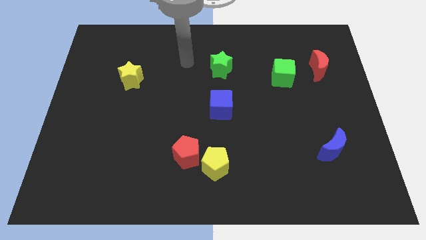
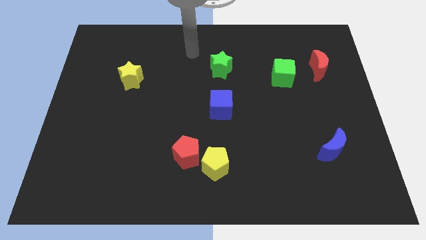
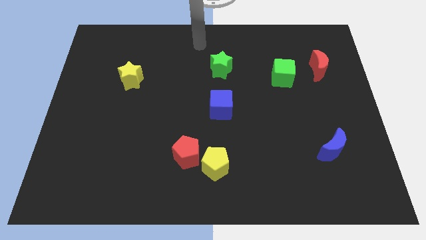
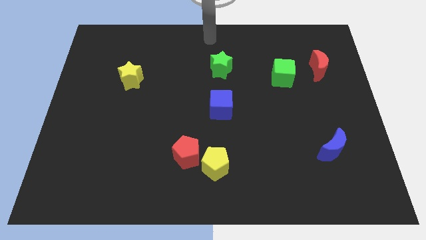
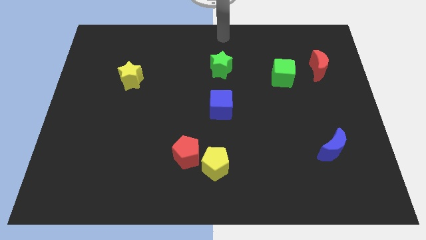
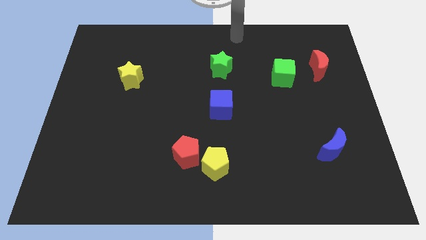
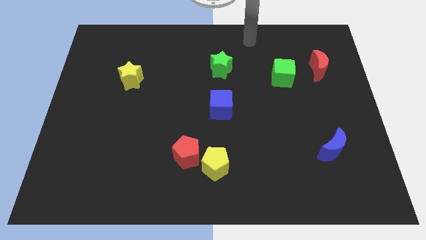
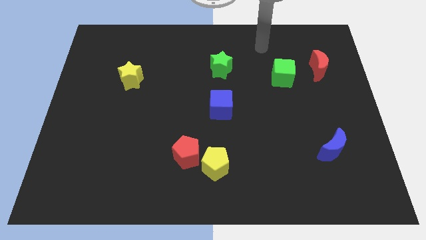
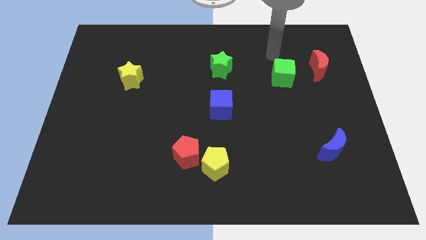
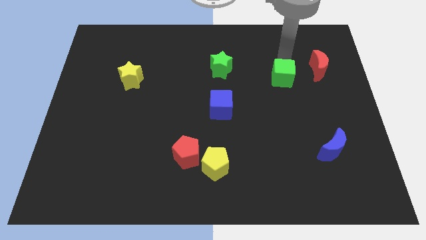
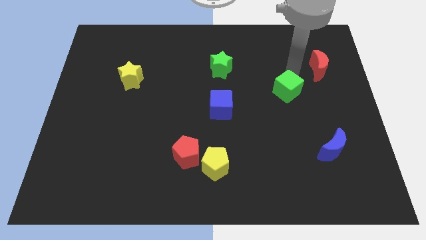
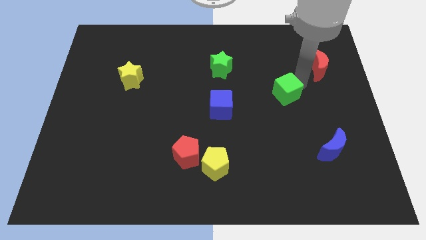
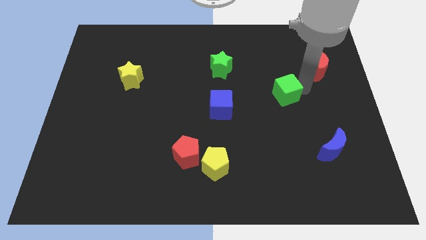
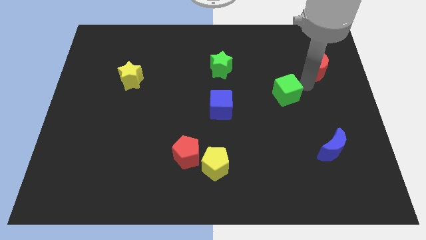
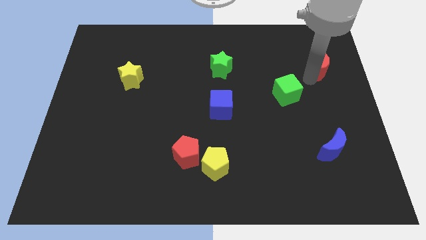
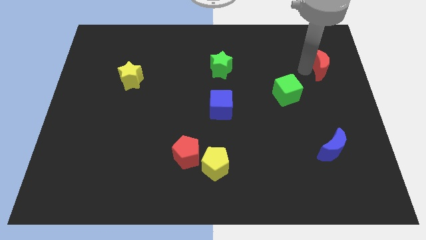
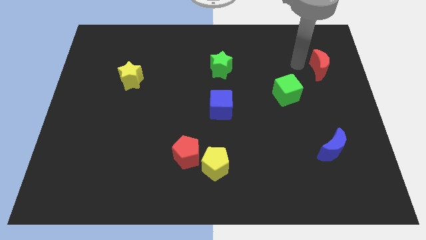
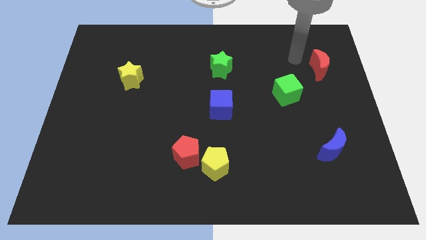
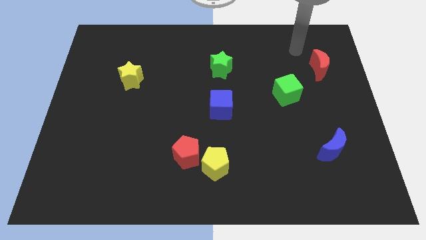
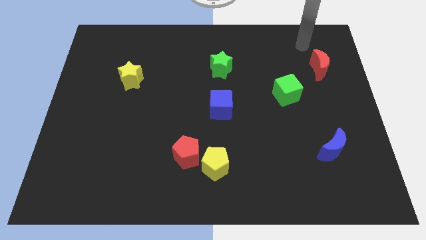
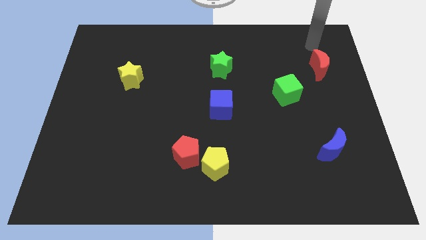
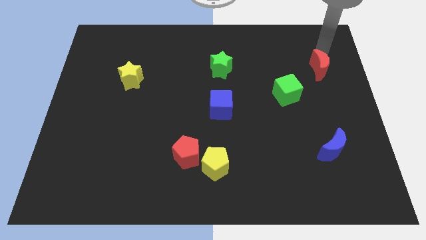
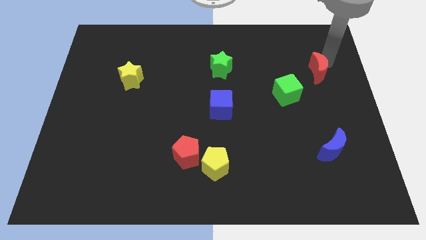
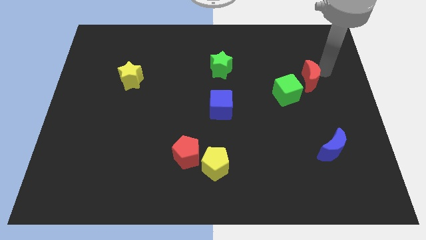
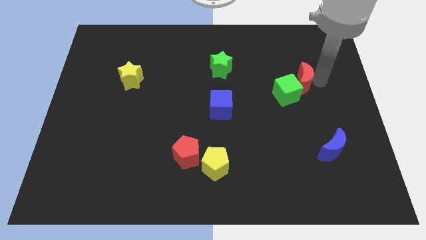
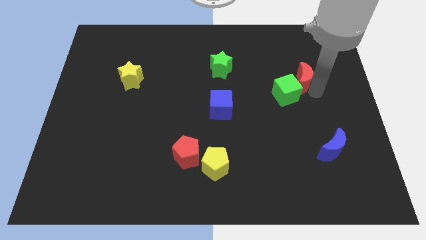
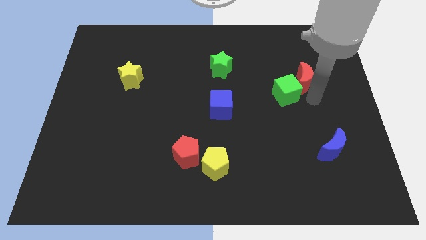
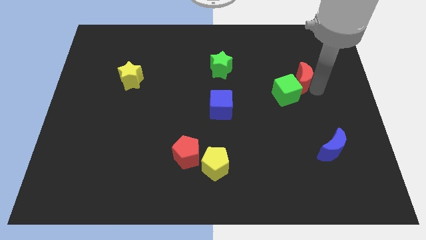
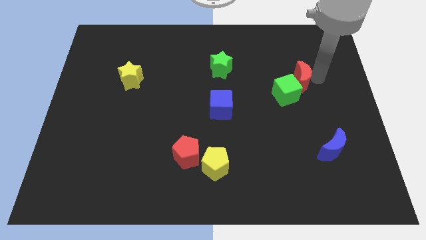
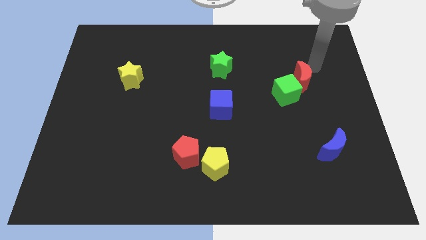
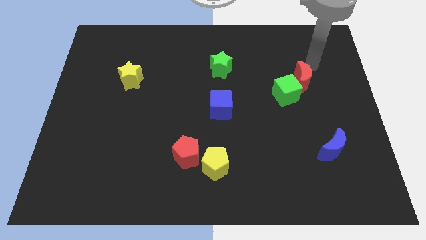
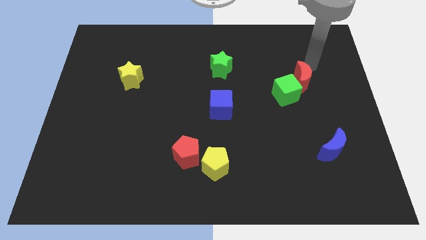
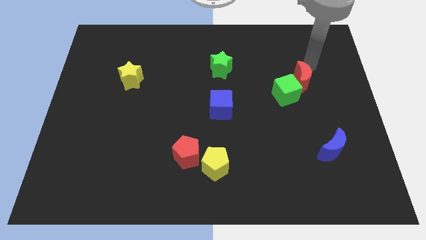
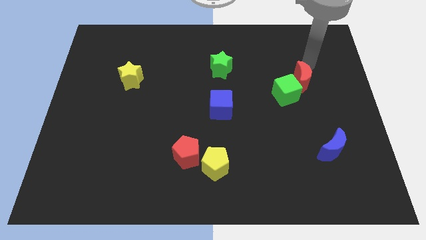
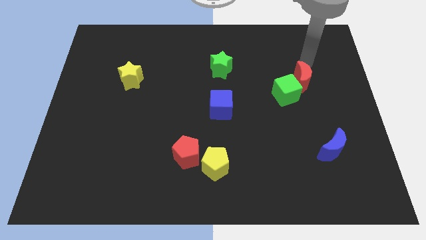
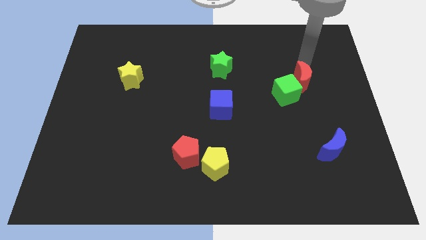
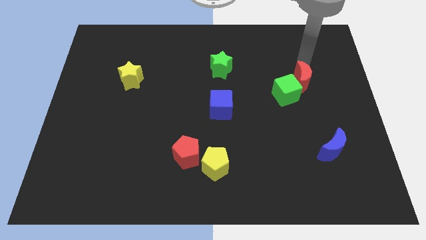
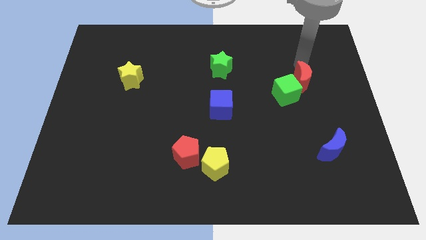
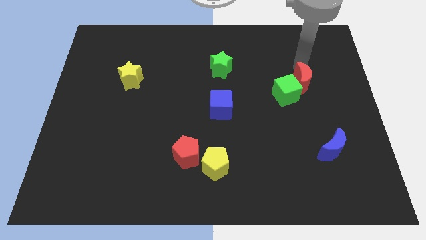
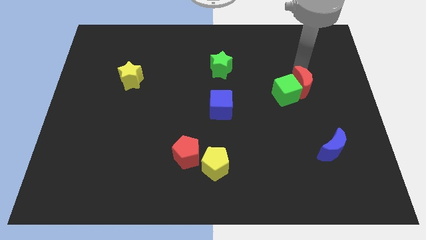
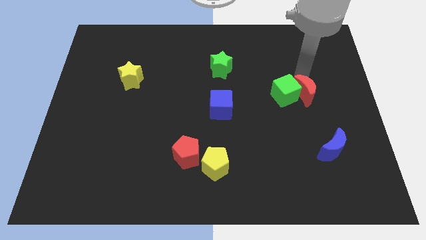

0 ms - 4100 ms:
join the green cube and the red crescent

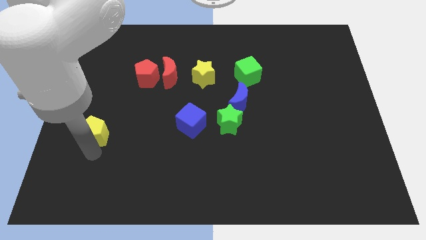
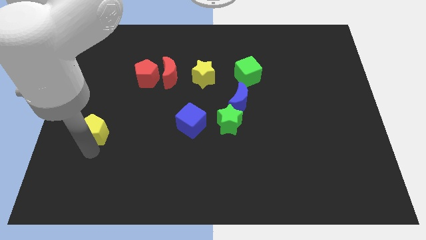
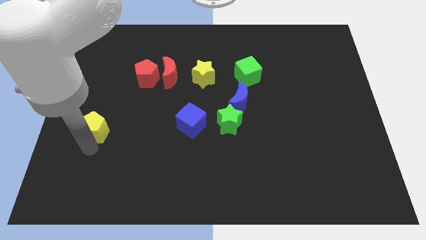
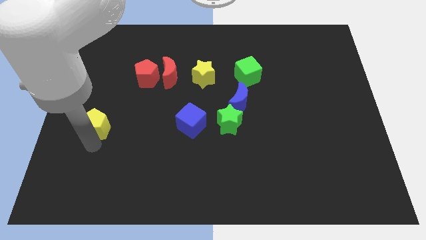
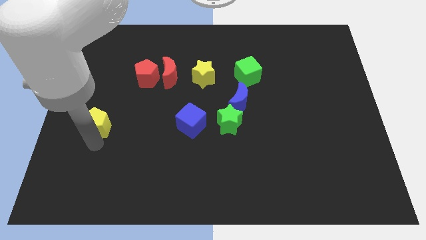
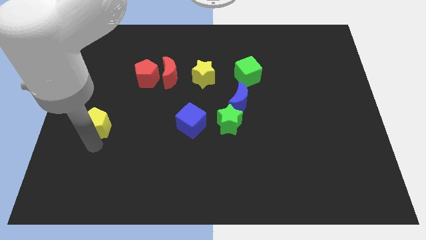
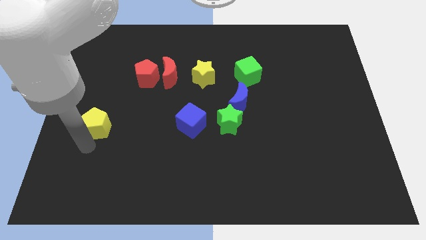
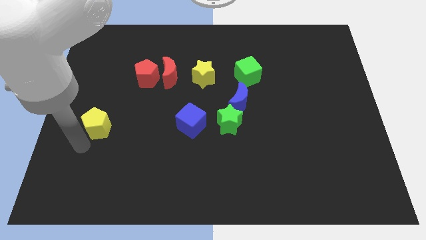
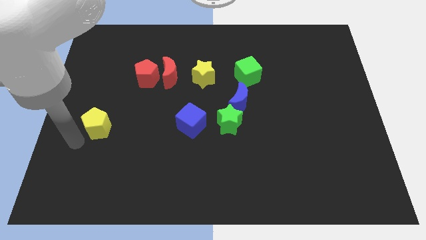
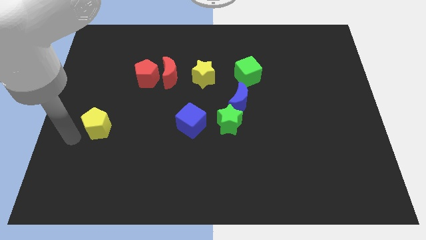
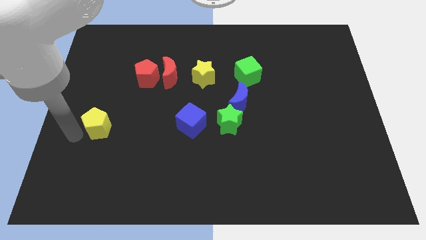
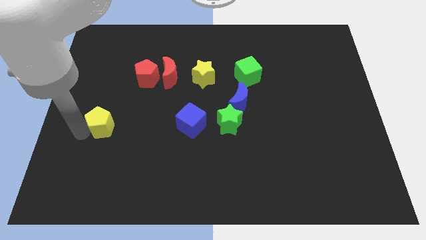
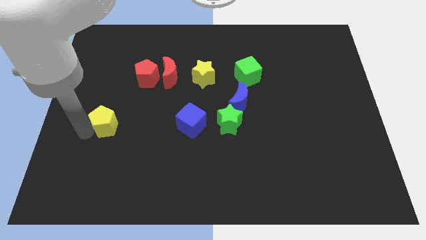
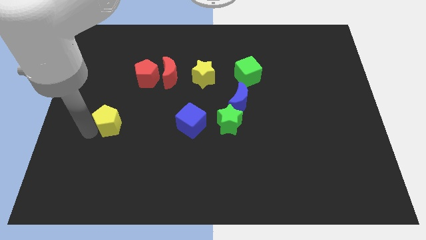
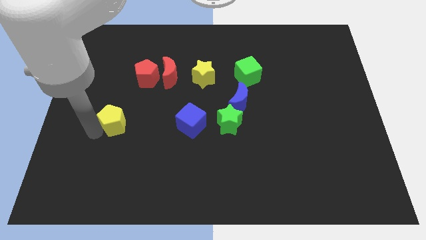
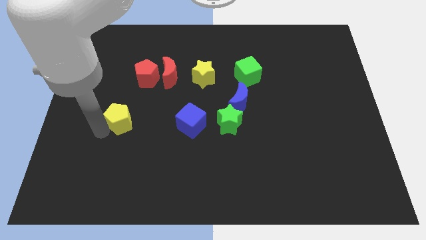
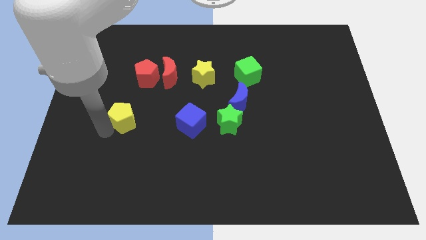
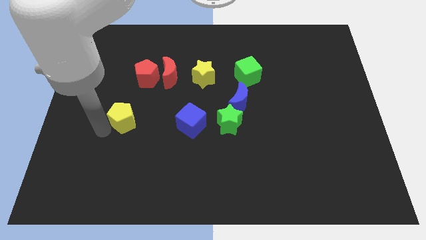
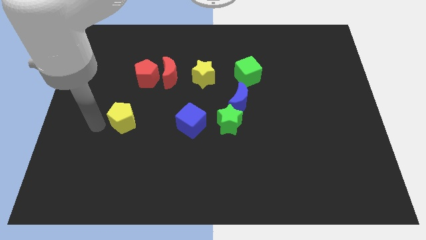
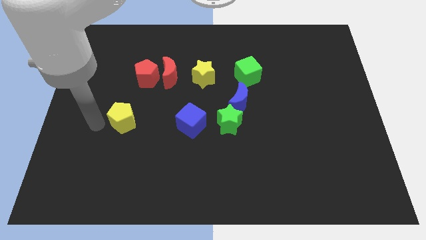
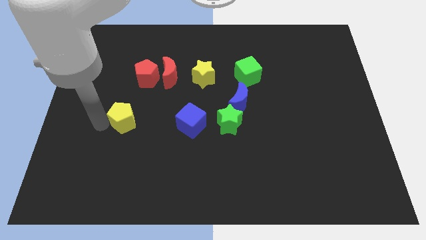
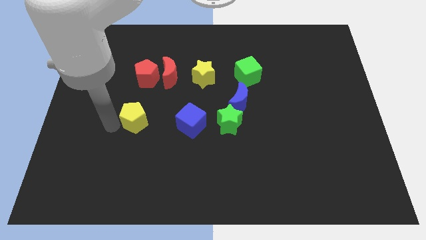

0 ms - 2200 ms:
move the yellow pentagon to the right

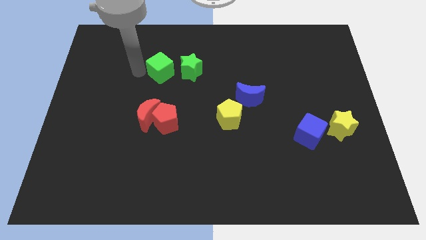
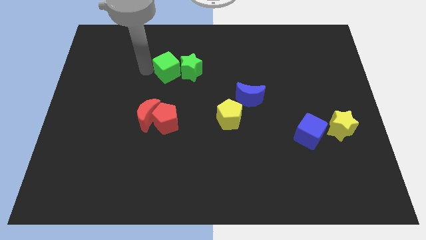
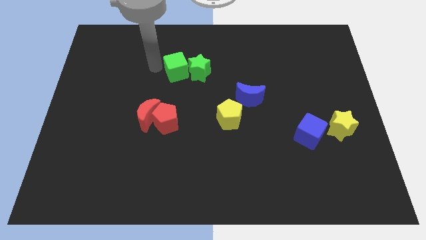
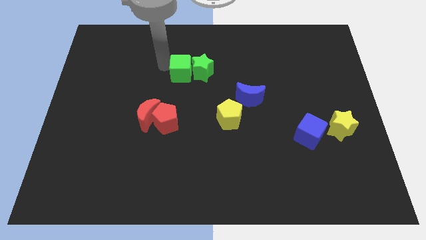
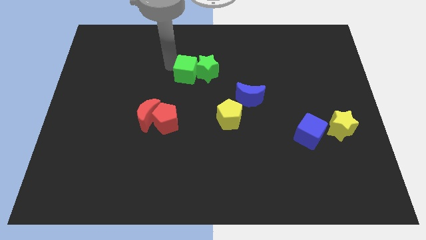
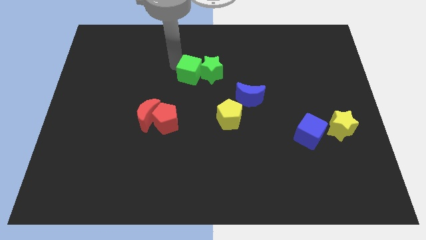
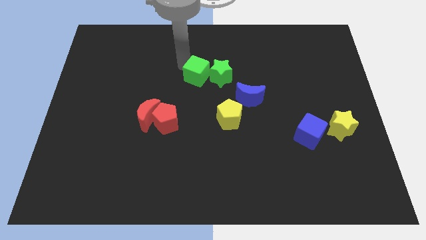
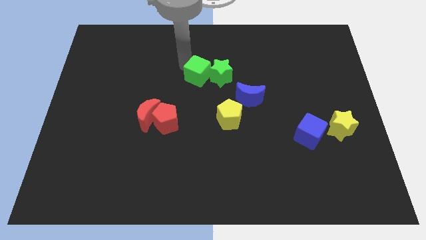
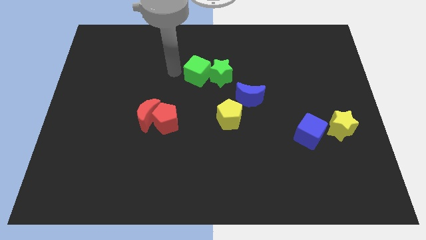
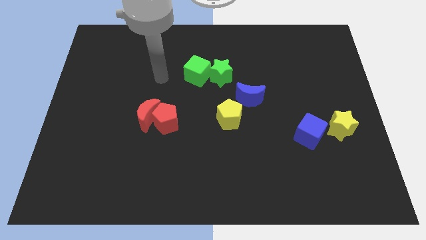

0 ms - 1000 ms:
push the green cube and green star to the center

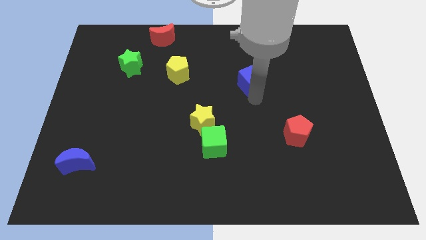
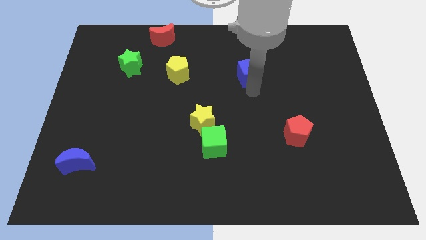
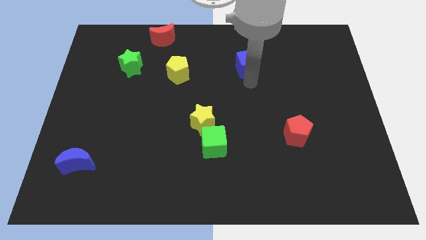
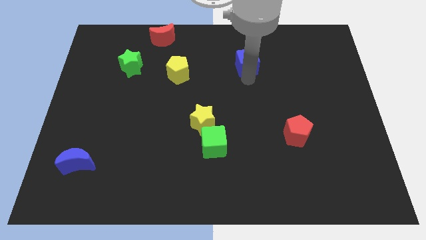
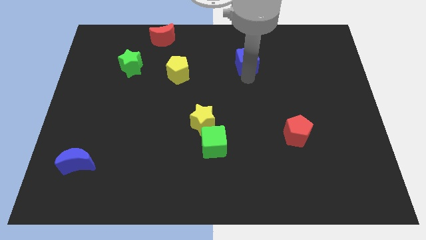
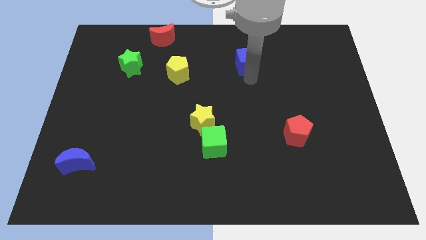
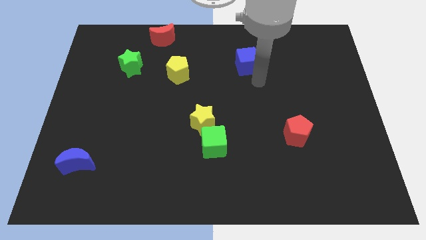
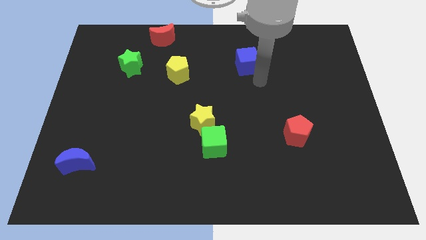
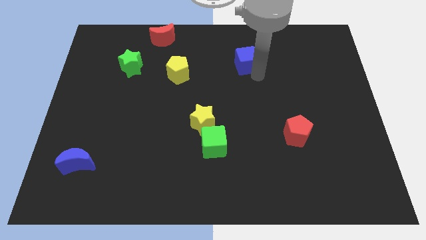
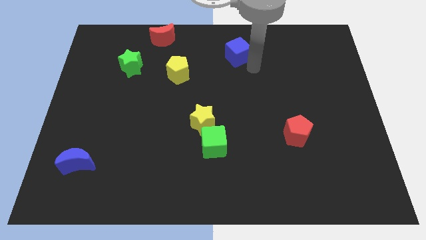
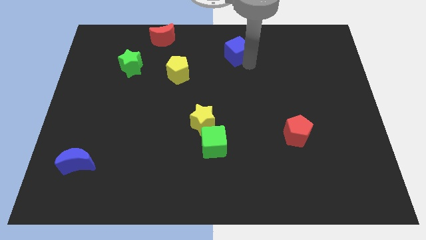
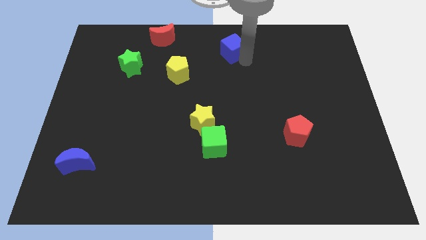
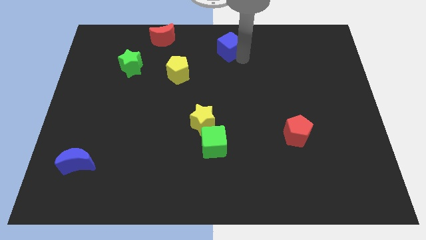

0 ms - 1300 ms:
slightly move the blue cube to the top center

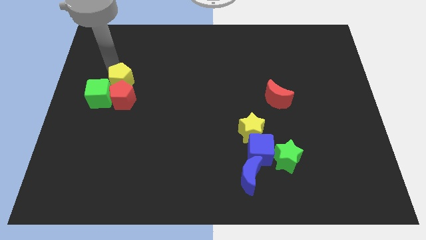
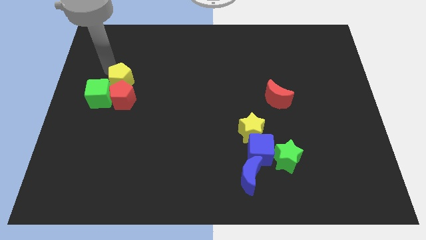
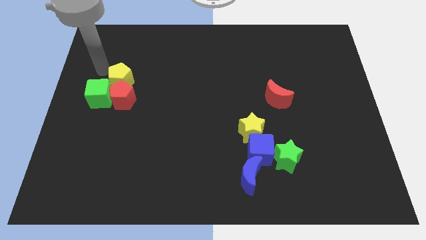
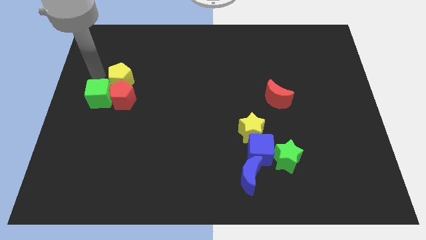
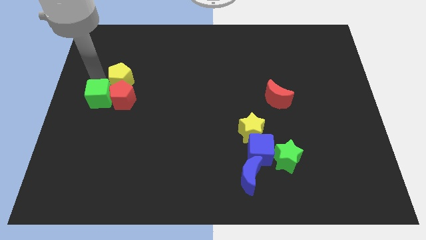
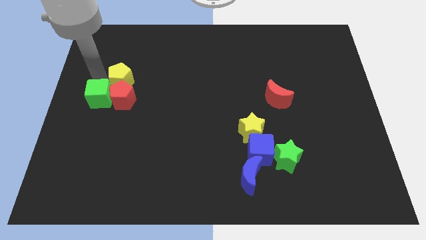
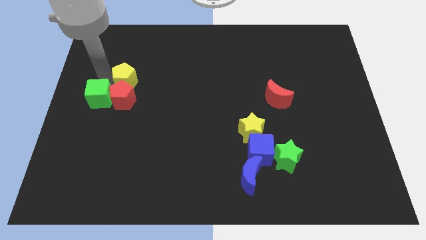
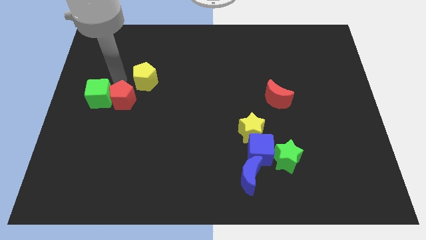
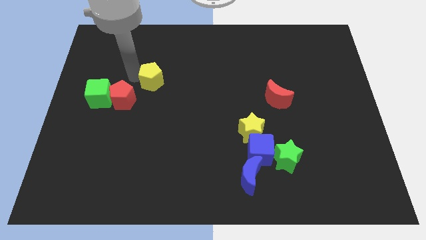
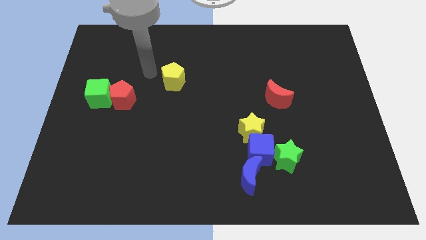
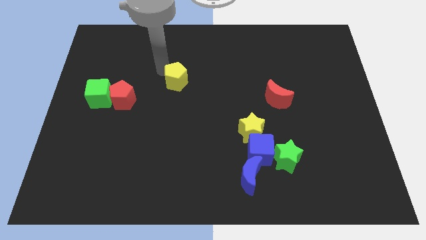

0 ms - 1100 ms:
separate yellow pentagon from red pentagon
